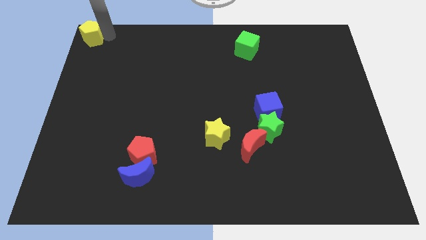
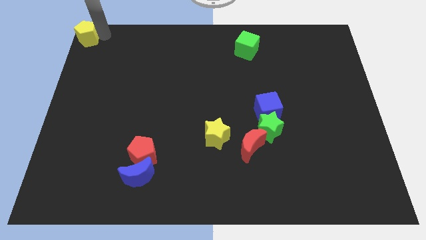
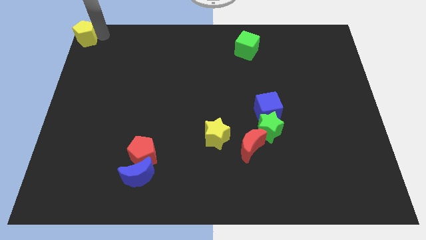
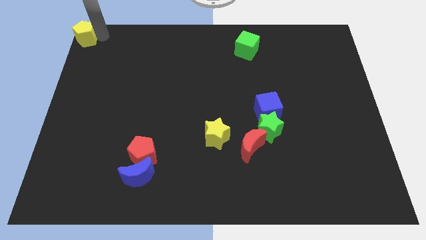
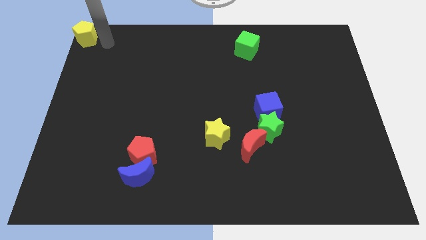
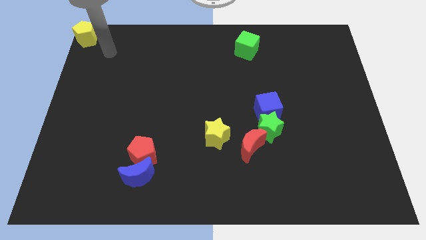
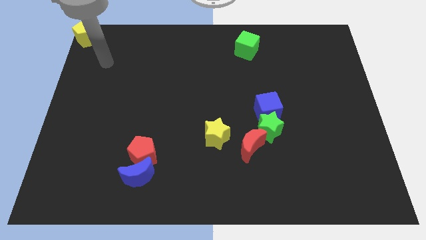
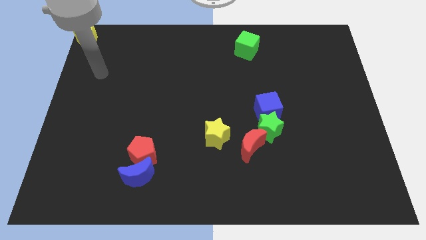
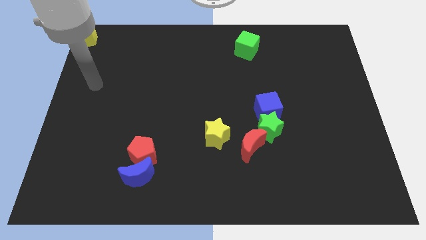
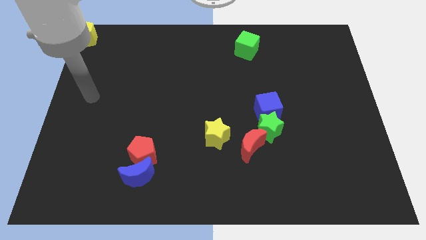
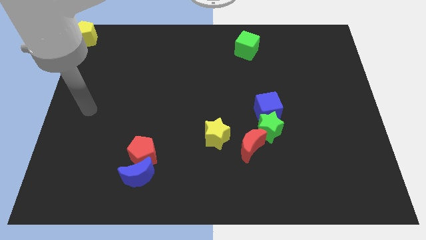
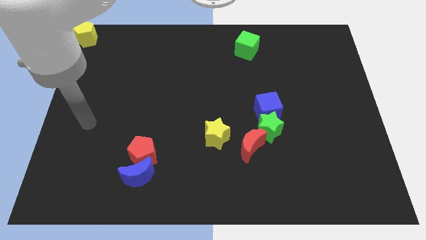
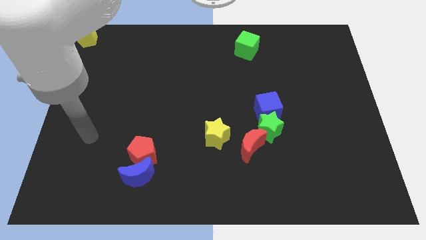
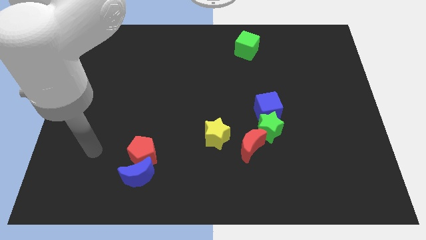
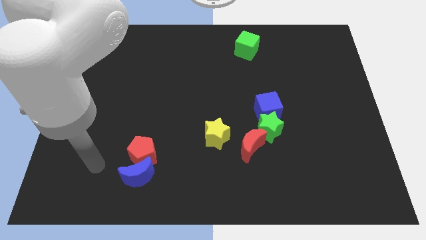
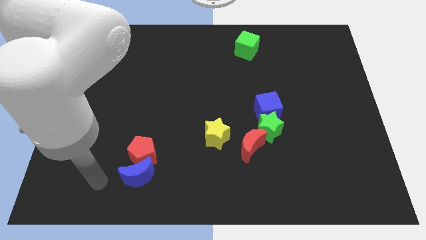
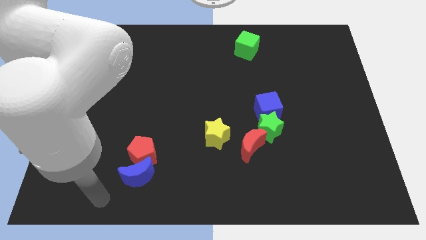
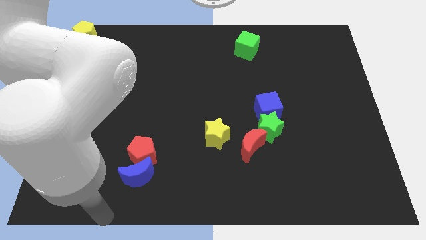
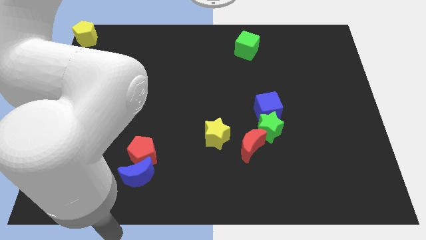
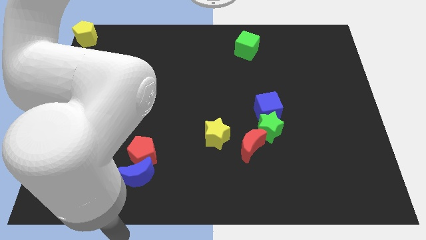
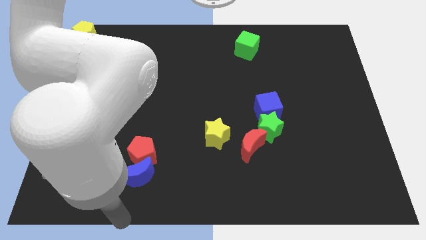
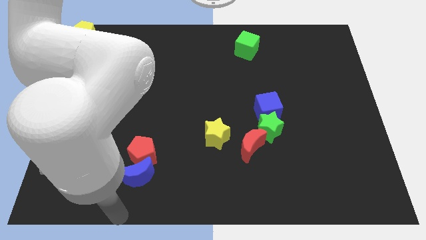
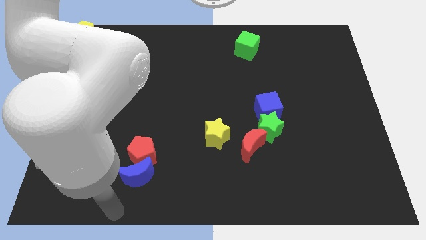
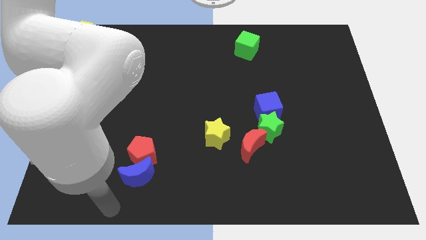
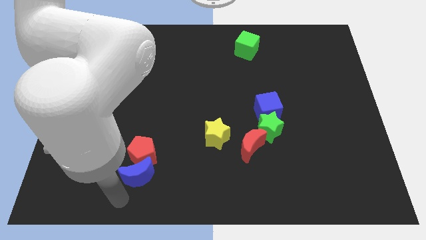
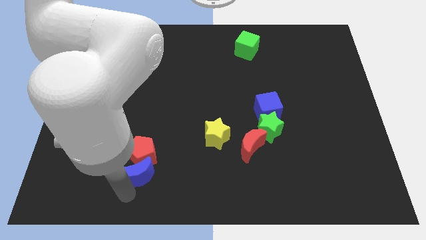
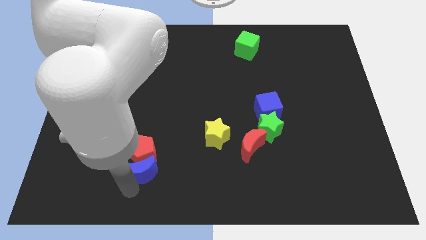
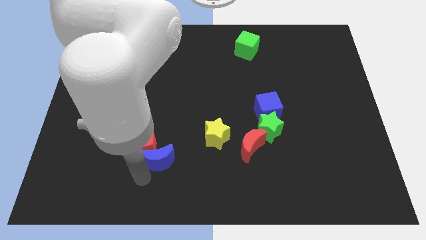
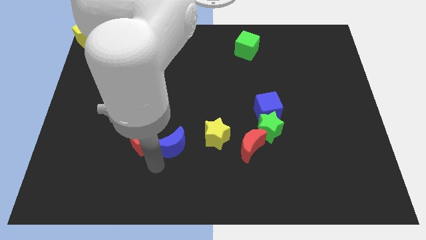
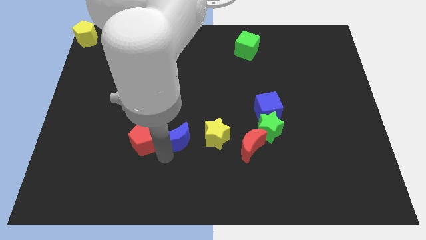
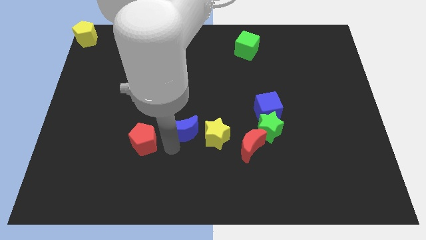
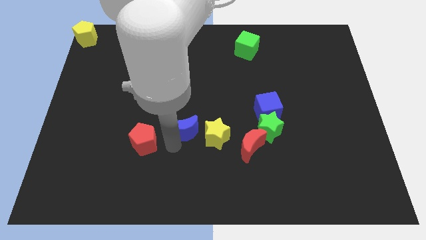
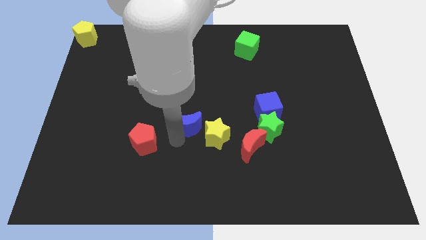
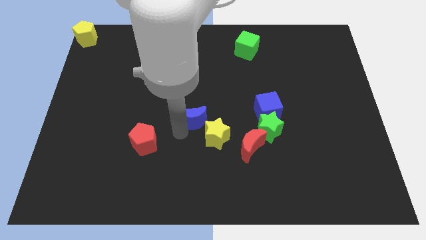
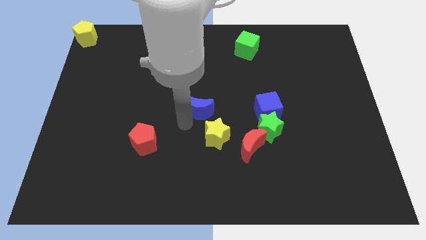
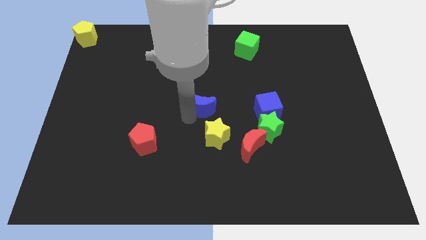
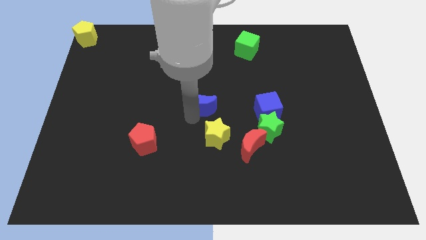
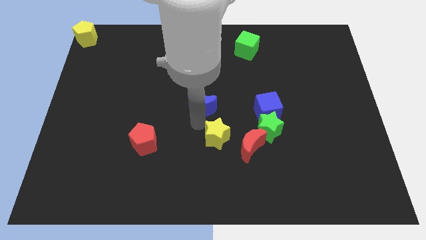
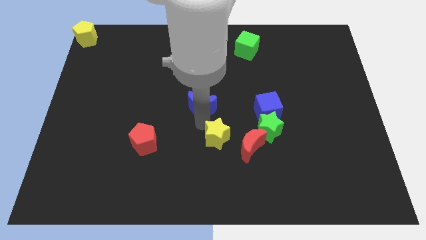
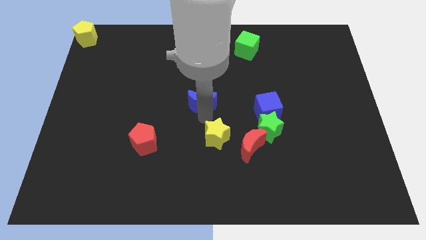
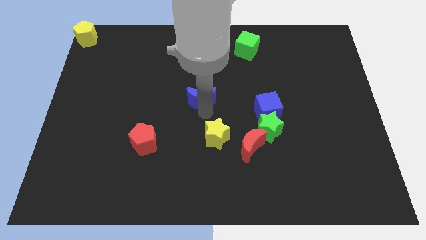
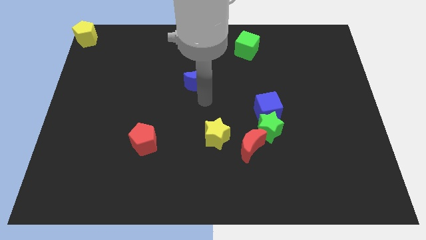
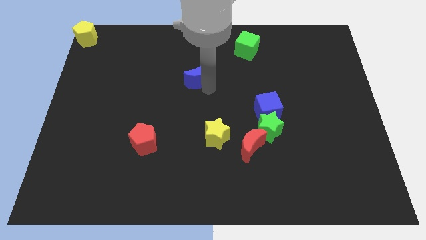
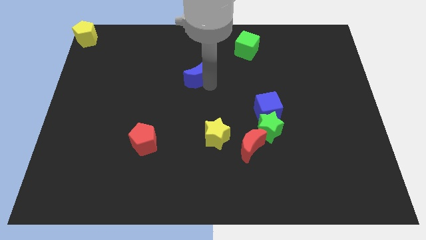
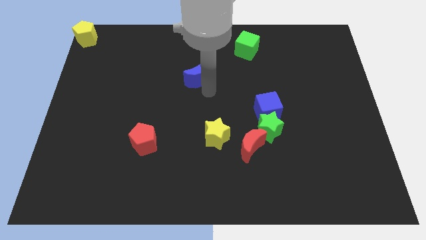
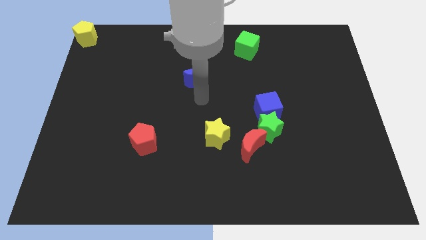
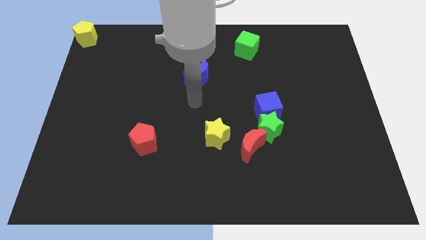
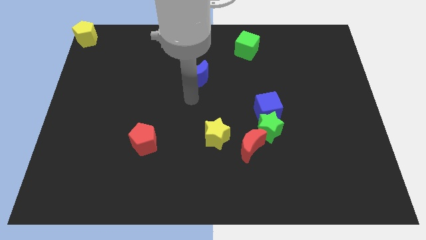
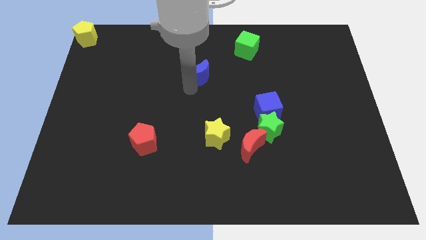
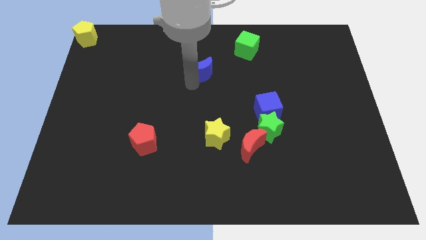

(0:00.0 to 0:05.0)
separate the red pentagon and the blue moon

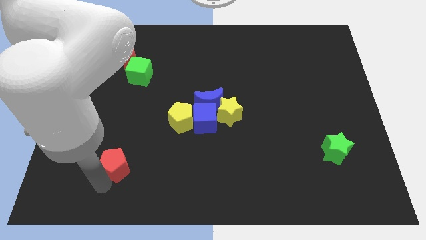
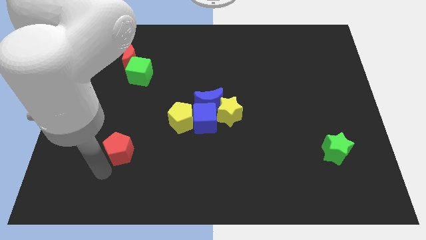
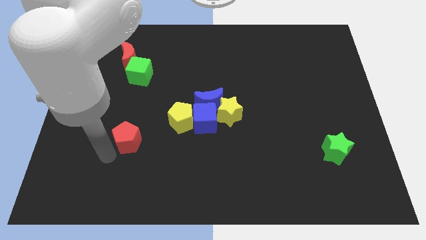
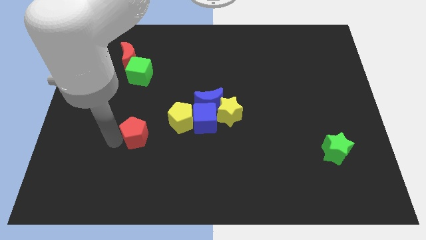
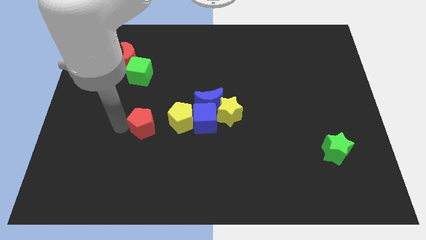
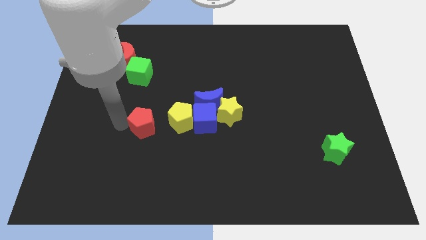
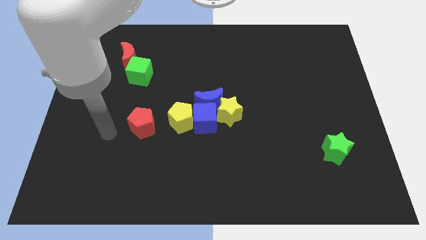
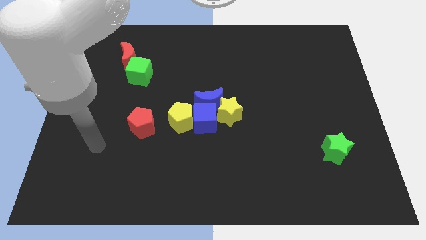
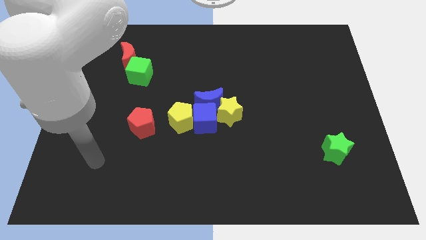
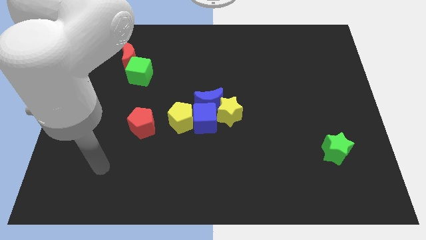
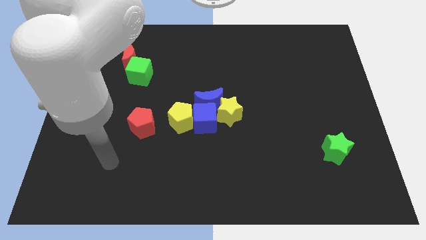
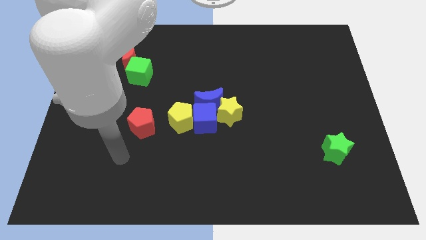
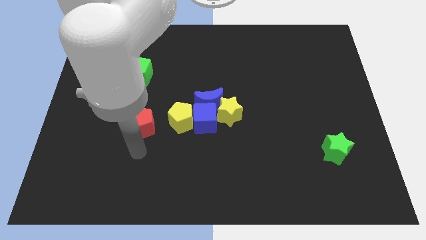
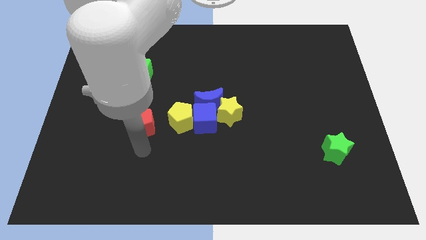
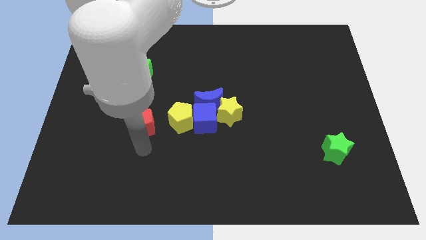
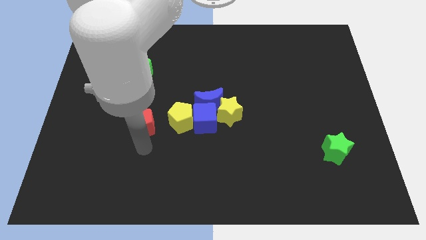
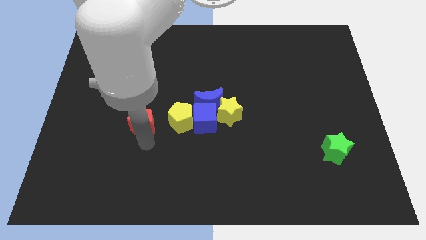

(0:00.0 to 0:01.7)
place the red pentagon to the left of the yellow pentagon

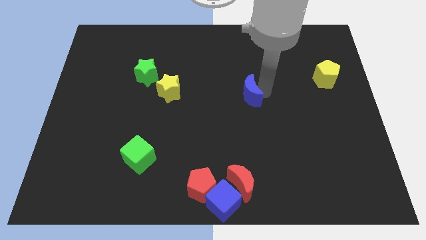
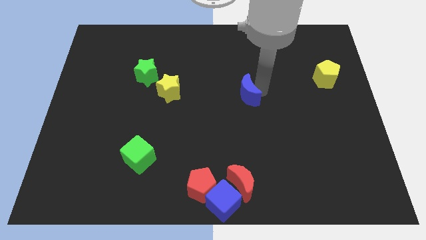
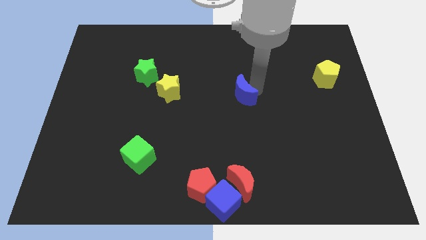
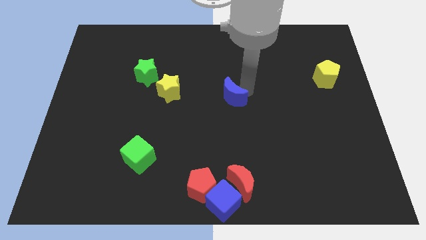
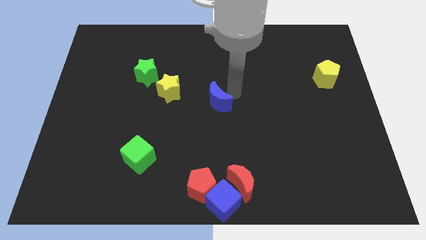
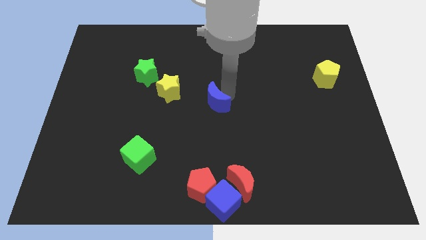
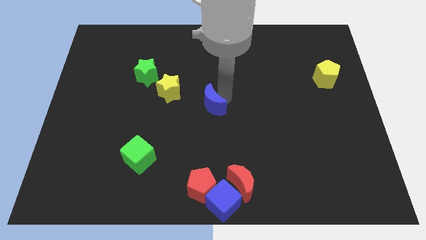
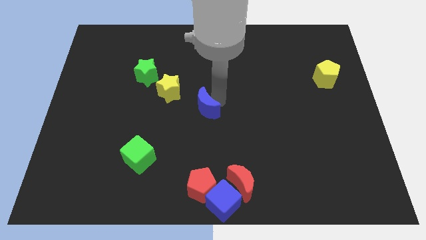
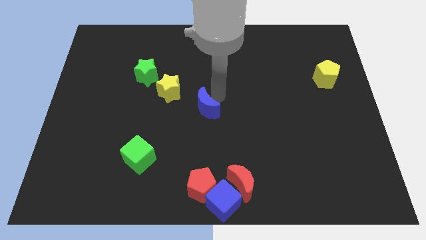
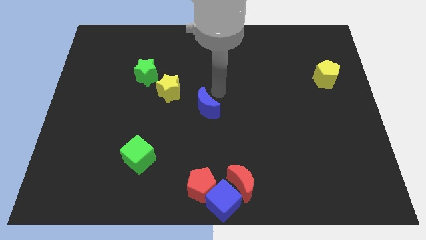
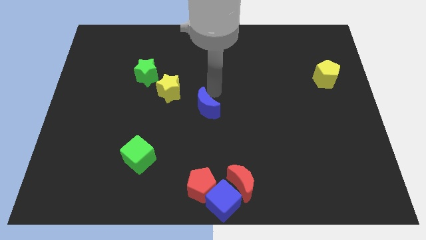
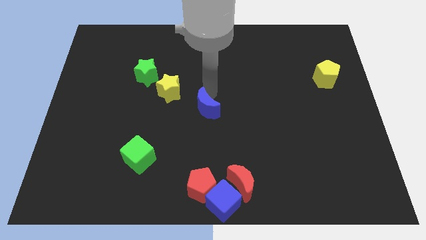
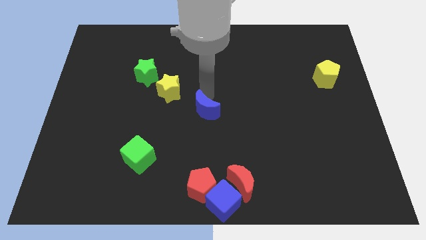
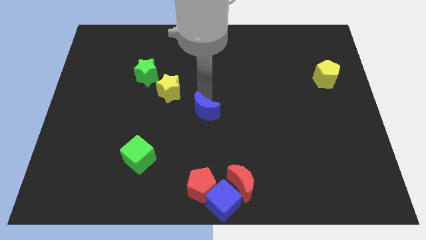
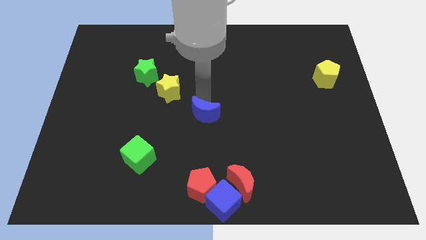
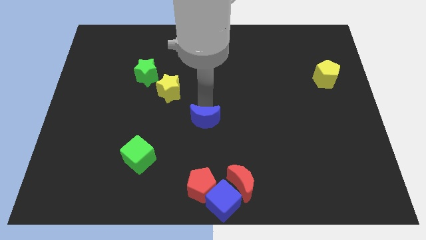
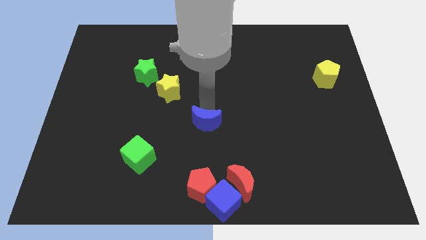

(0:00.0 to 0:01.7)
place the blue moon vertically to the red pentagon

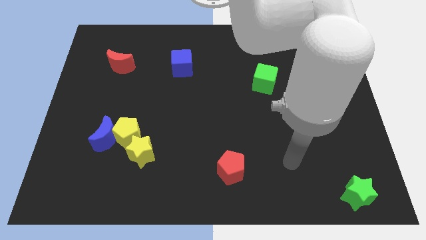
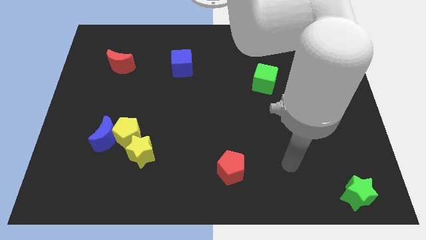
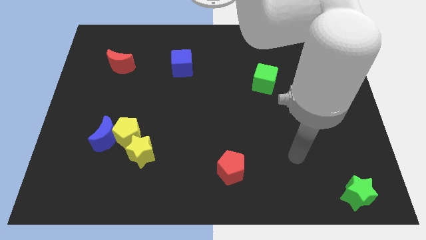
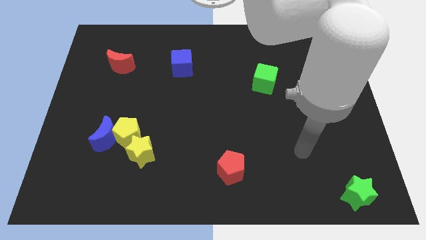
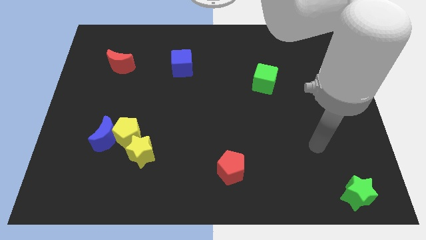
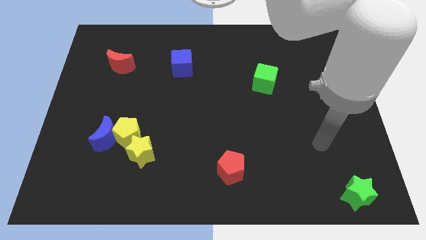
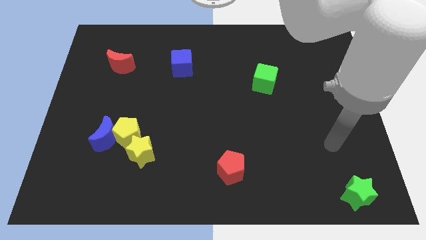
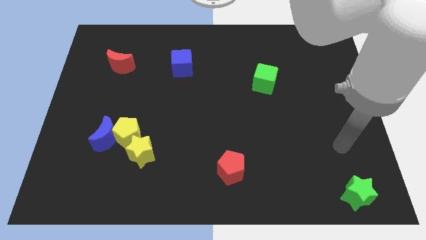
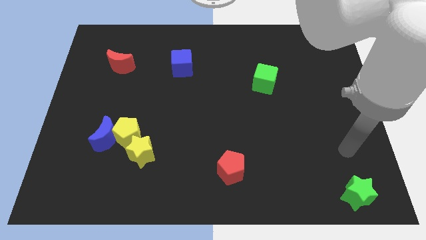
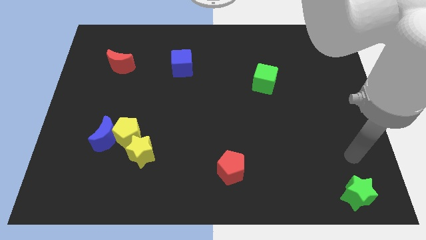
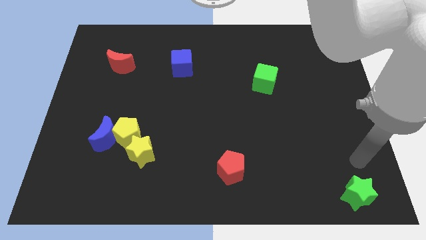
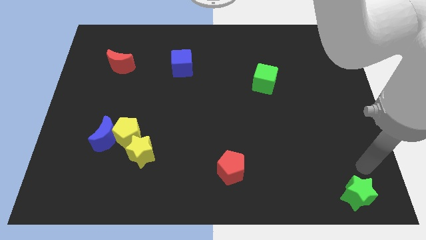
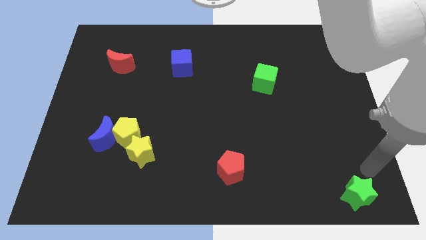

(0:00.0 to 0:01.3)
move your arm near the green star
